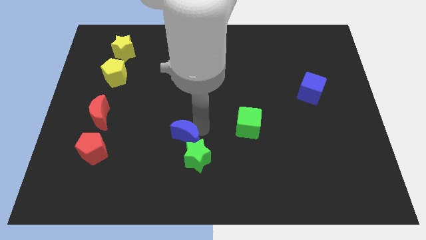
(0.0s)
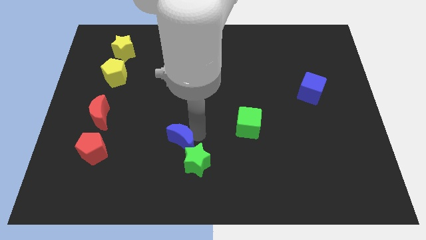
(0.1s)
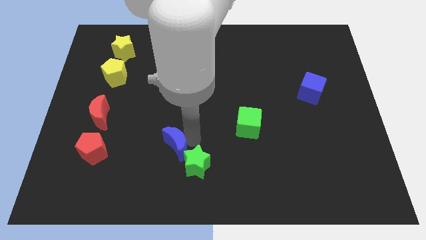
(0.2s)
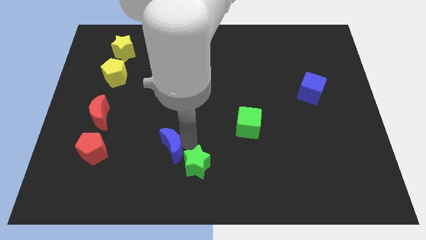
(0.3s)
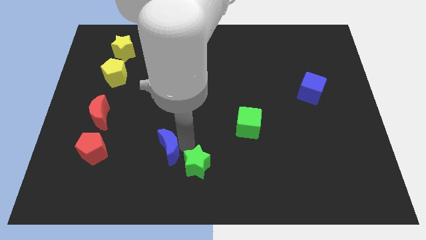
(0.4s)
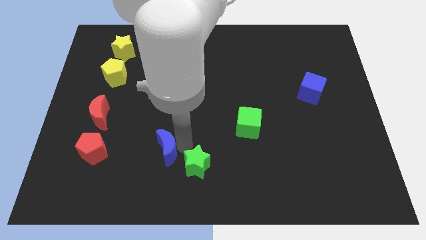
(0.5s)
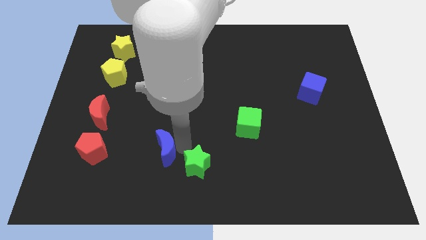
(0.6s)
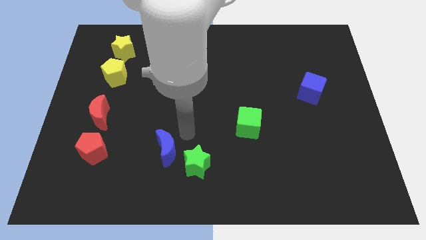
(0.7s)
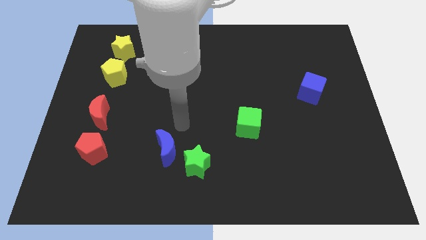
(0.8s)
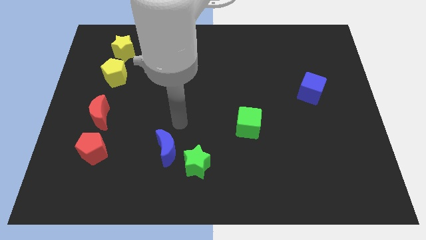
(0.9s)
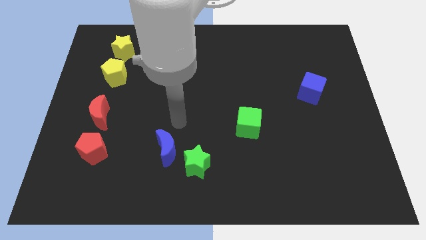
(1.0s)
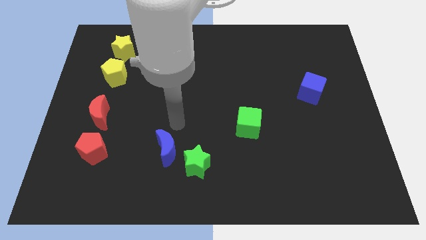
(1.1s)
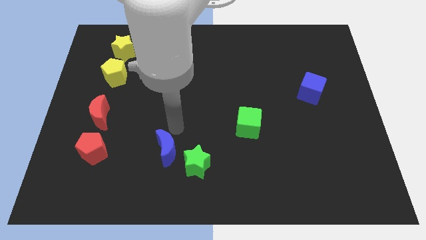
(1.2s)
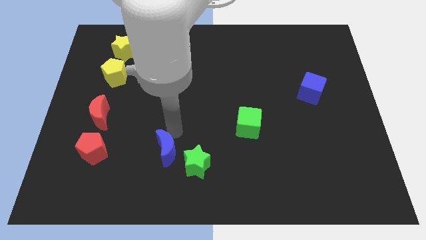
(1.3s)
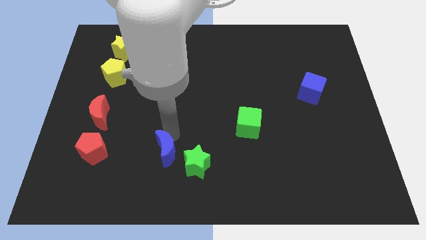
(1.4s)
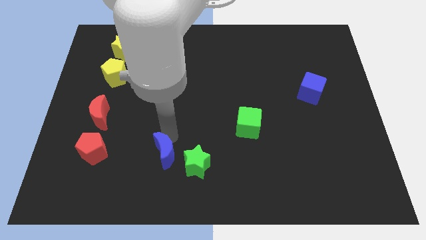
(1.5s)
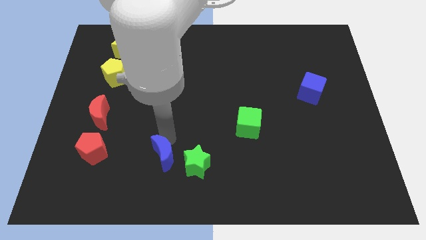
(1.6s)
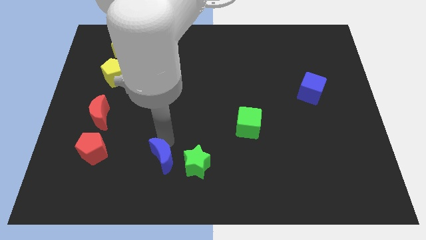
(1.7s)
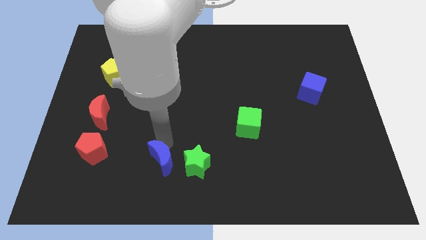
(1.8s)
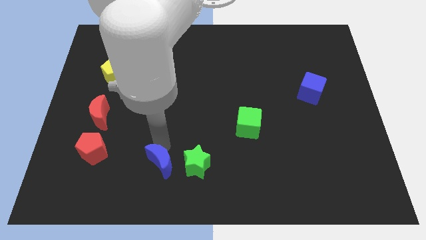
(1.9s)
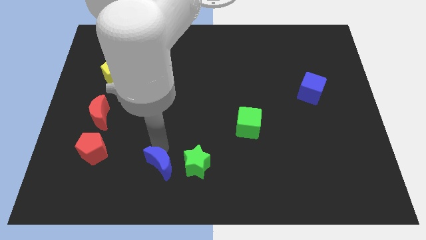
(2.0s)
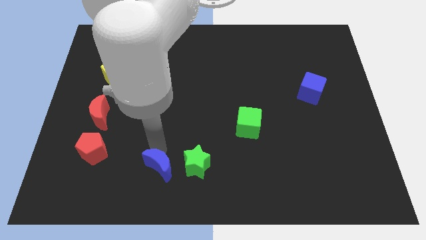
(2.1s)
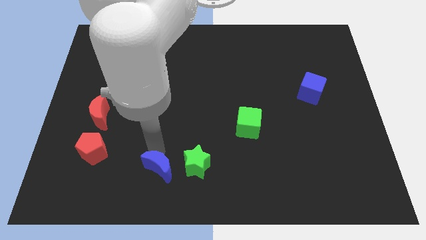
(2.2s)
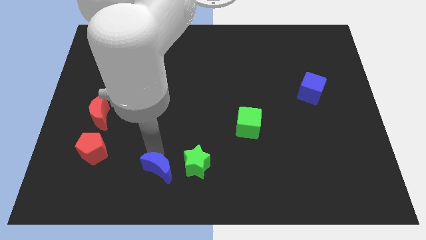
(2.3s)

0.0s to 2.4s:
separate the blue crescent to the left of the green star

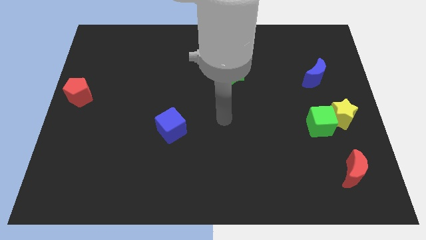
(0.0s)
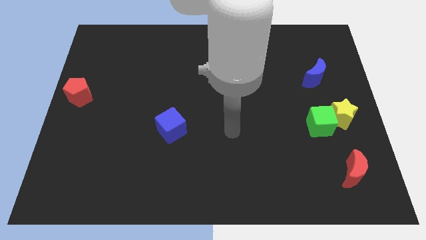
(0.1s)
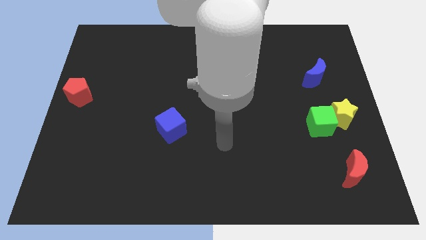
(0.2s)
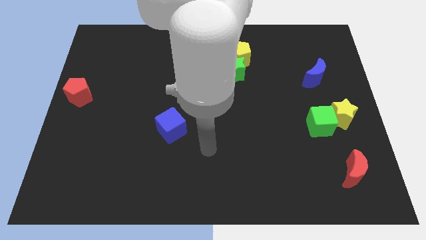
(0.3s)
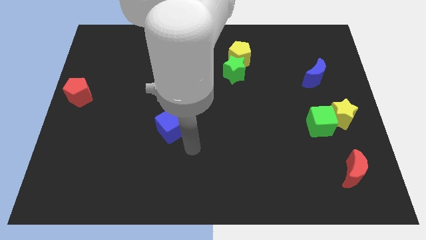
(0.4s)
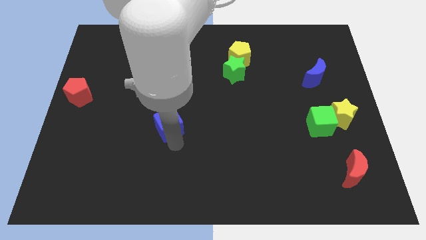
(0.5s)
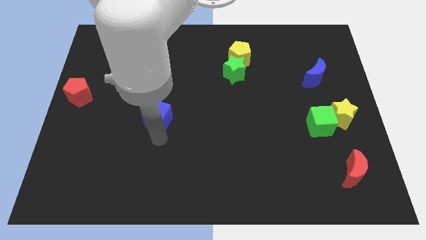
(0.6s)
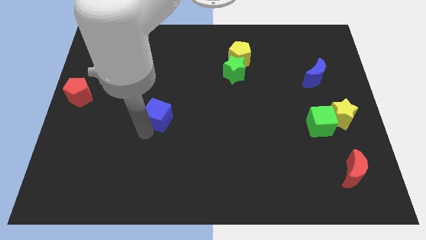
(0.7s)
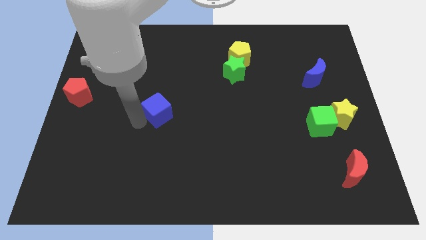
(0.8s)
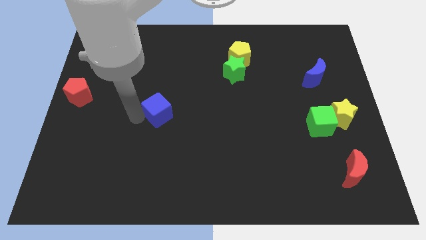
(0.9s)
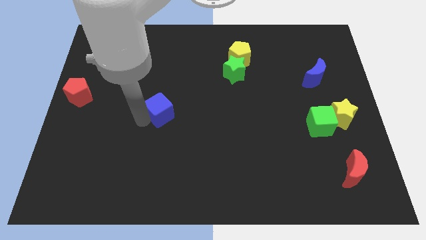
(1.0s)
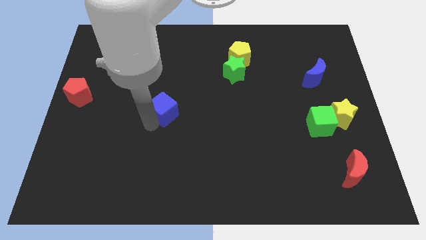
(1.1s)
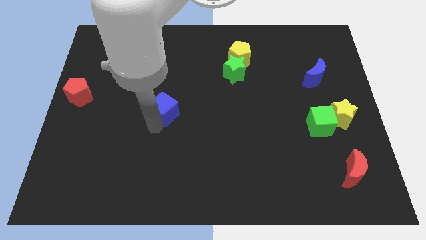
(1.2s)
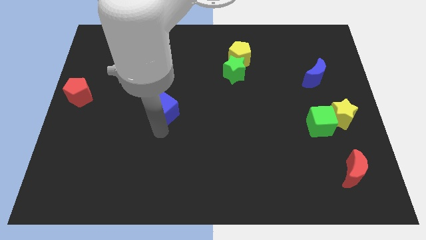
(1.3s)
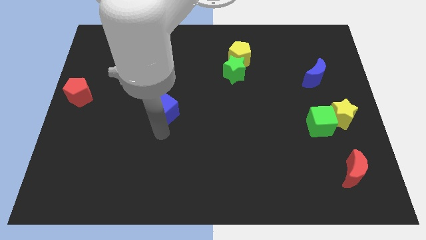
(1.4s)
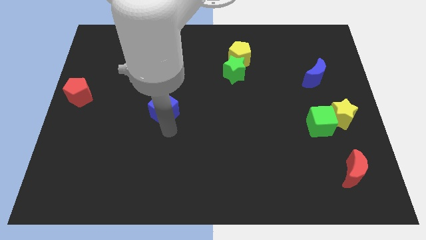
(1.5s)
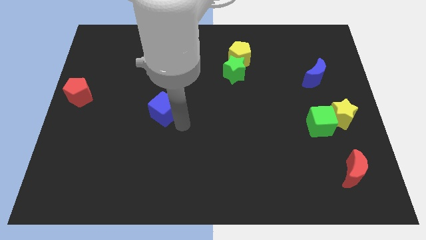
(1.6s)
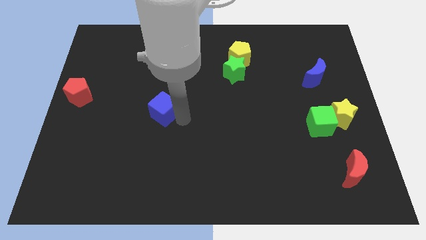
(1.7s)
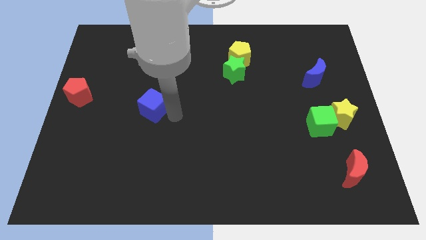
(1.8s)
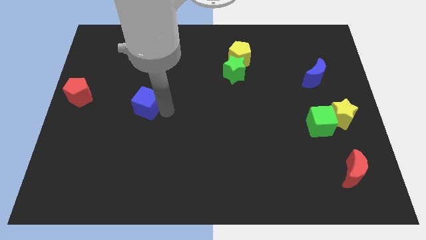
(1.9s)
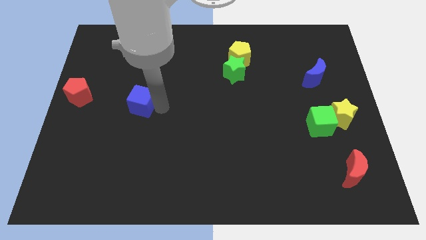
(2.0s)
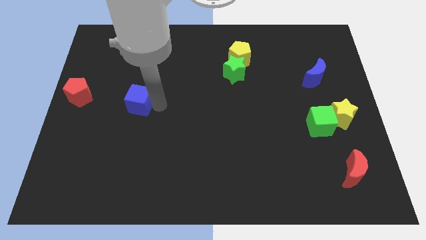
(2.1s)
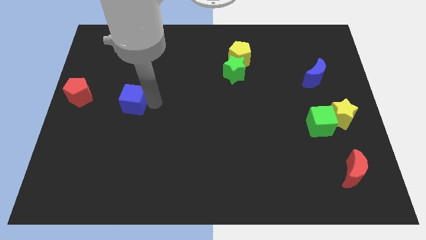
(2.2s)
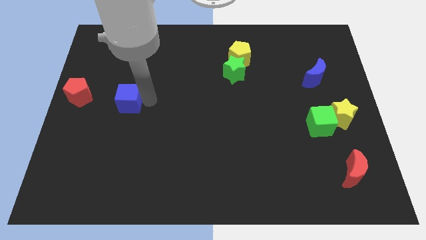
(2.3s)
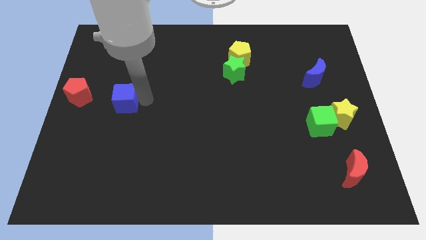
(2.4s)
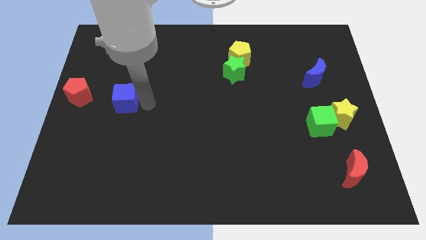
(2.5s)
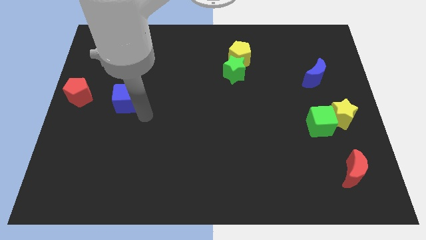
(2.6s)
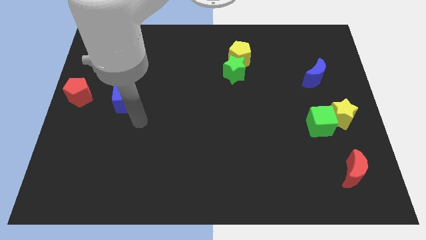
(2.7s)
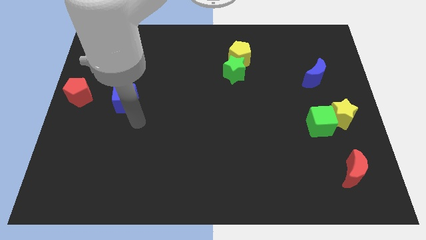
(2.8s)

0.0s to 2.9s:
place blue cube to the right of red pentagon

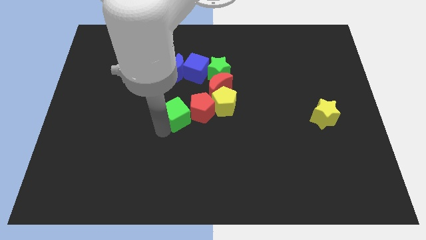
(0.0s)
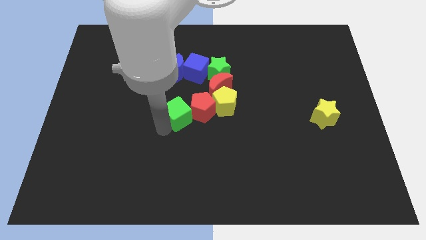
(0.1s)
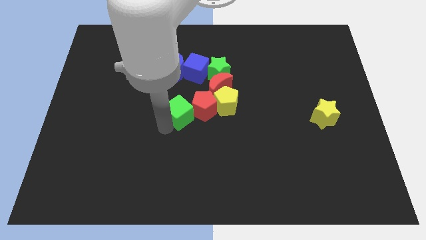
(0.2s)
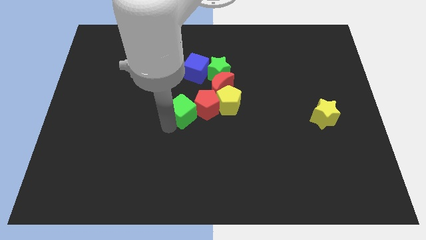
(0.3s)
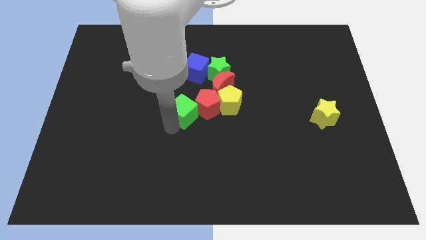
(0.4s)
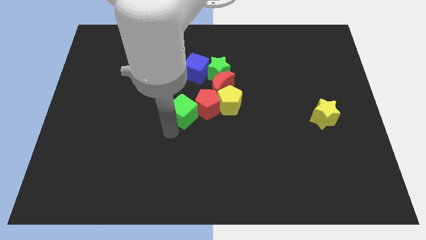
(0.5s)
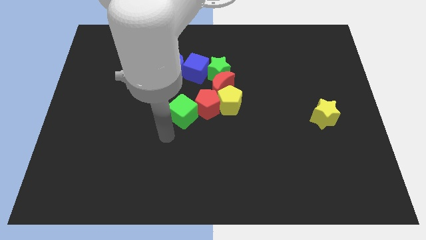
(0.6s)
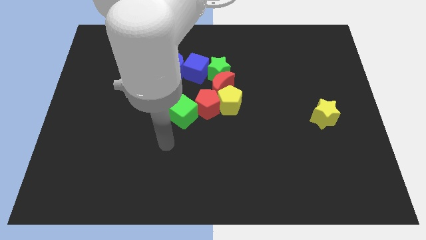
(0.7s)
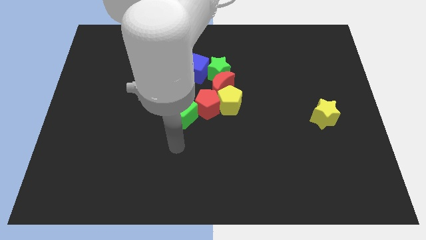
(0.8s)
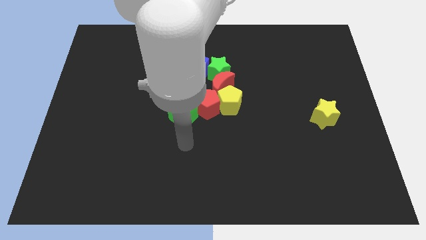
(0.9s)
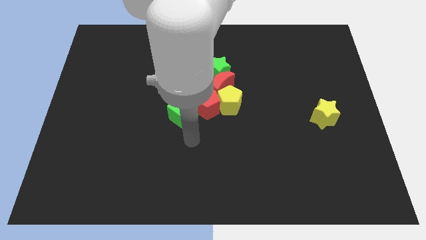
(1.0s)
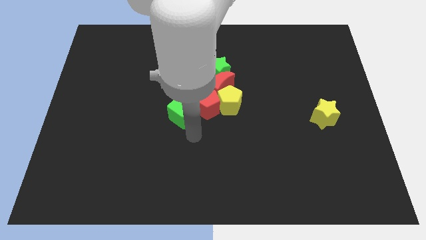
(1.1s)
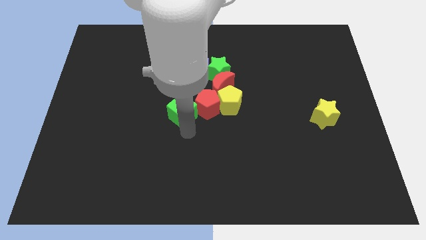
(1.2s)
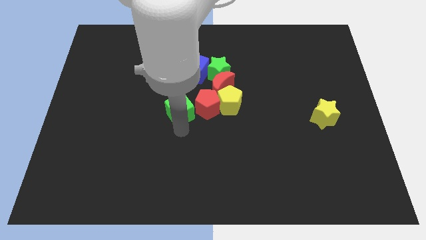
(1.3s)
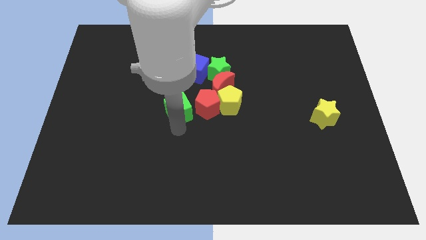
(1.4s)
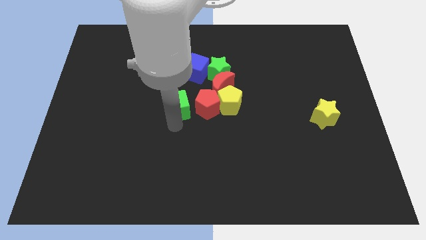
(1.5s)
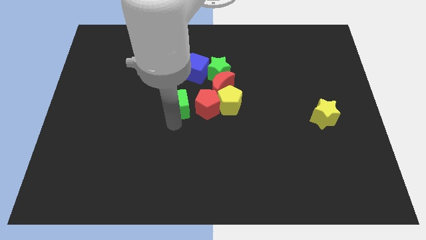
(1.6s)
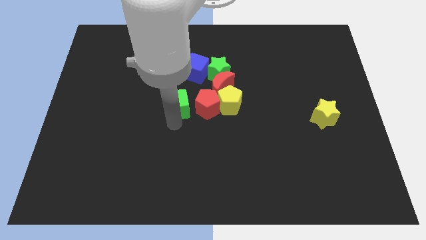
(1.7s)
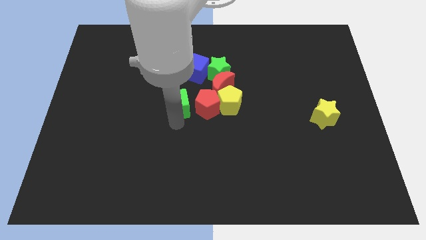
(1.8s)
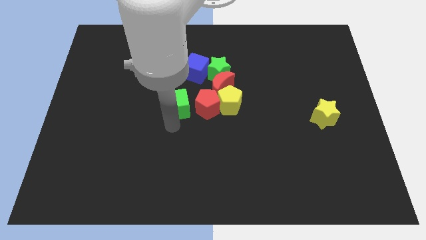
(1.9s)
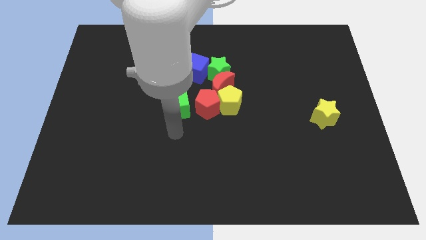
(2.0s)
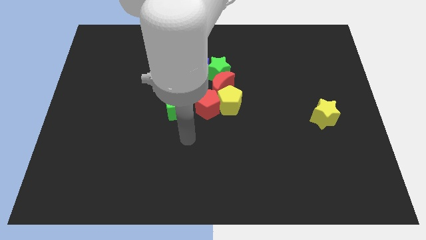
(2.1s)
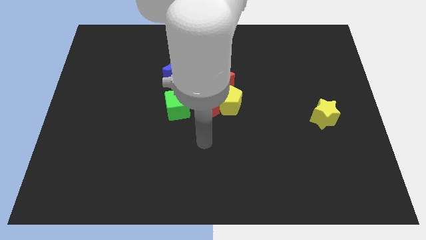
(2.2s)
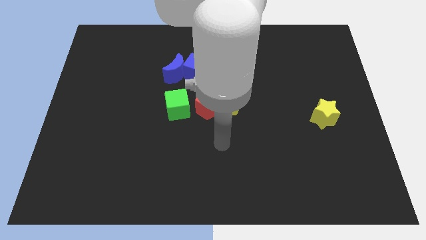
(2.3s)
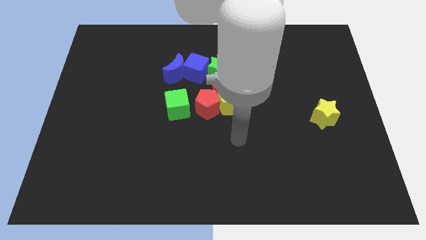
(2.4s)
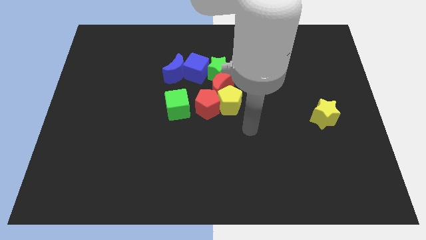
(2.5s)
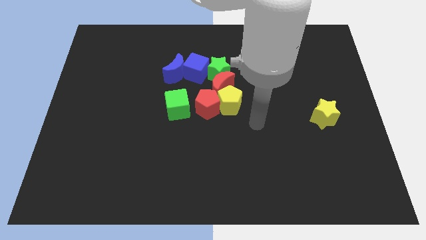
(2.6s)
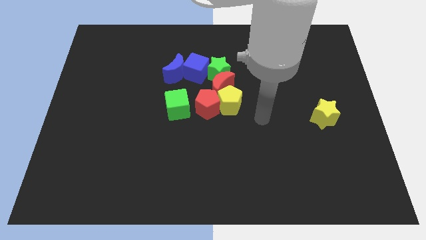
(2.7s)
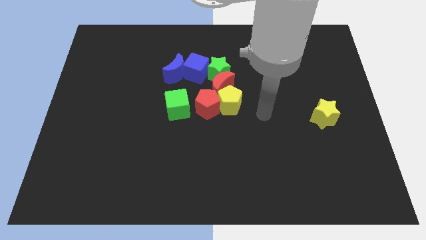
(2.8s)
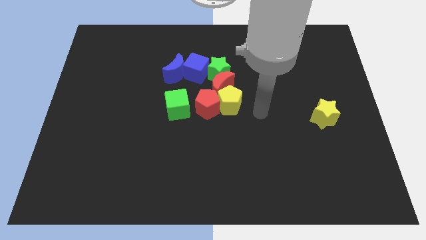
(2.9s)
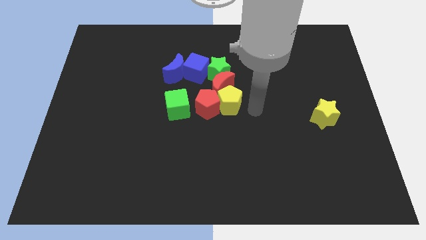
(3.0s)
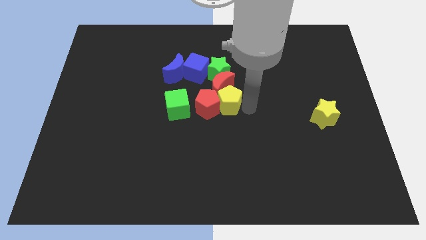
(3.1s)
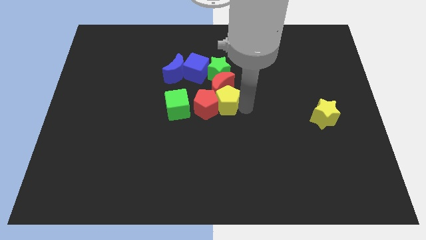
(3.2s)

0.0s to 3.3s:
move your arm to the right side of the yellow pentagon

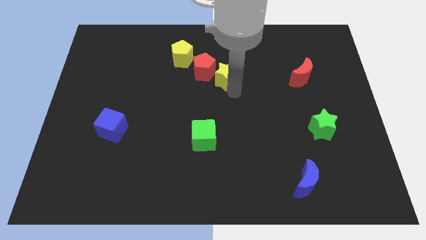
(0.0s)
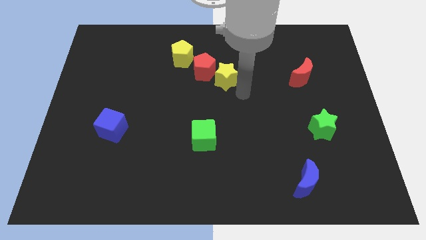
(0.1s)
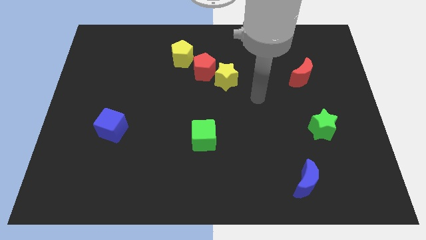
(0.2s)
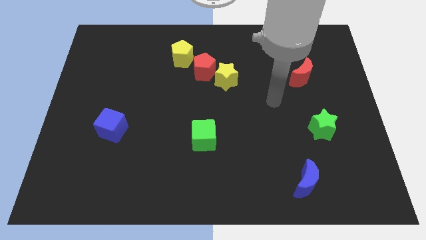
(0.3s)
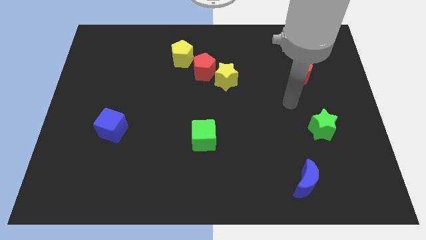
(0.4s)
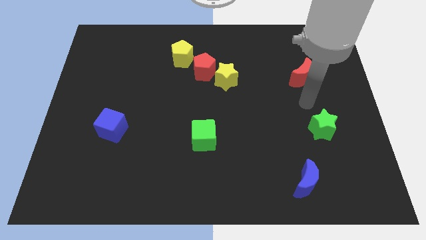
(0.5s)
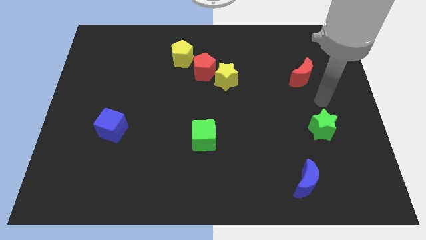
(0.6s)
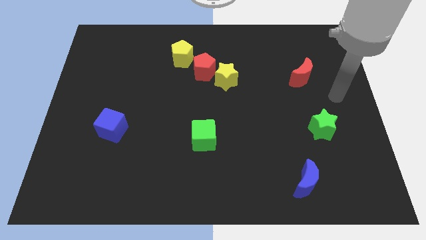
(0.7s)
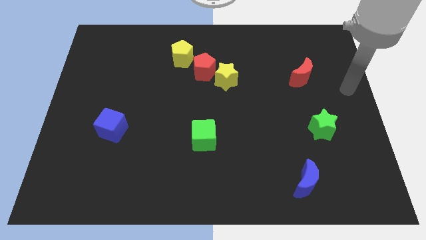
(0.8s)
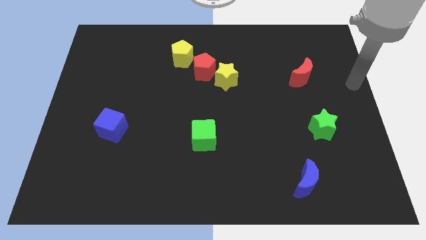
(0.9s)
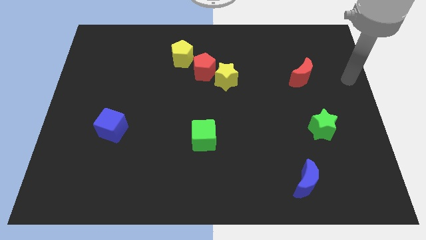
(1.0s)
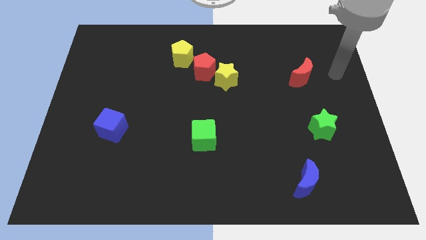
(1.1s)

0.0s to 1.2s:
go and point your arm at the right side of the red crescent
